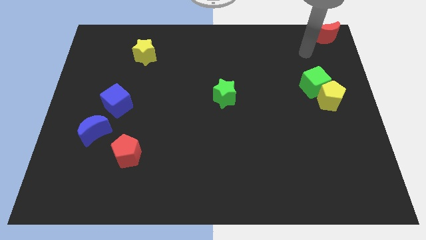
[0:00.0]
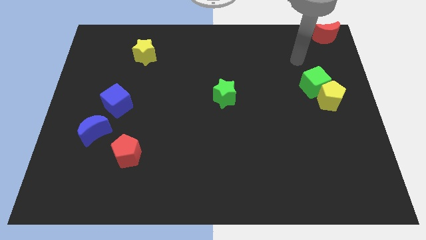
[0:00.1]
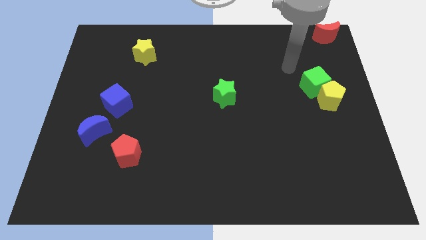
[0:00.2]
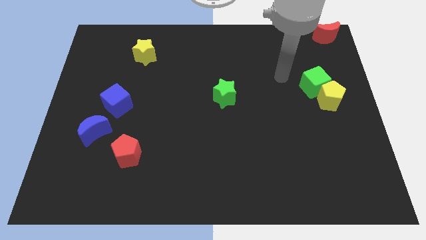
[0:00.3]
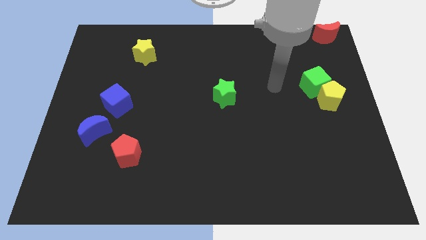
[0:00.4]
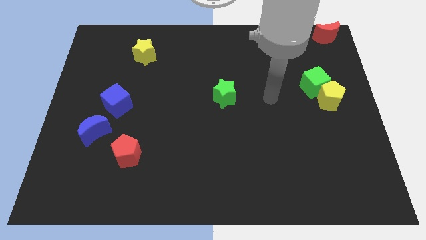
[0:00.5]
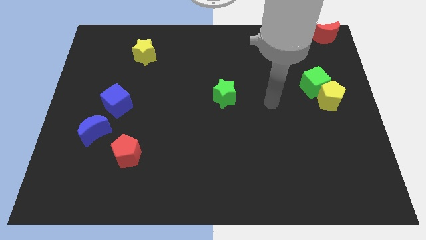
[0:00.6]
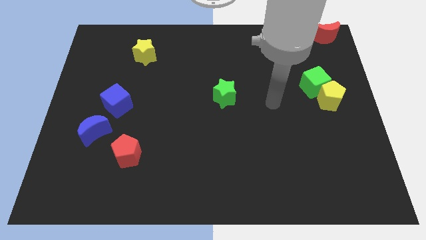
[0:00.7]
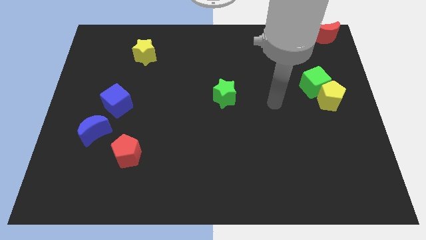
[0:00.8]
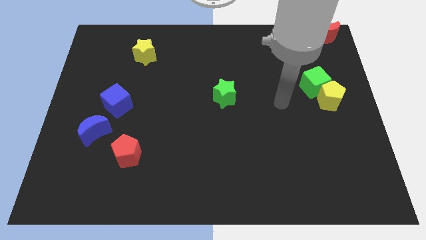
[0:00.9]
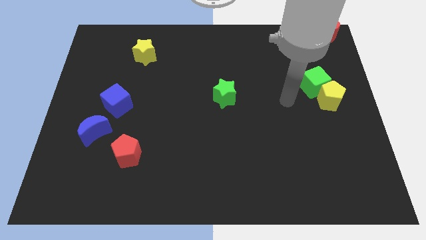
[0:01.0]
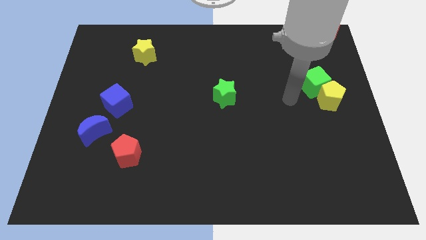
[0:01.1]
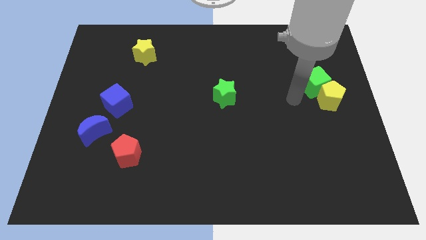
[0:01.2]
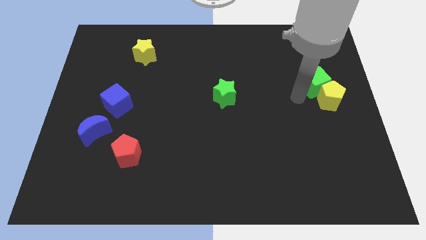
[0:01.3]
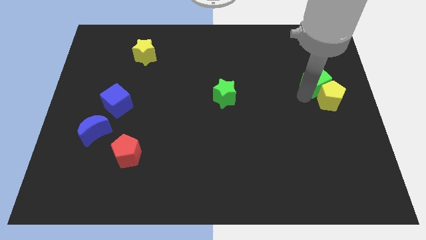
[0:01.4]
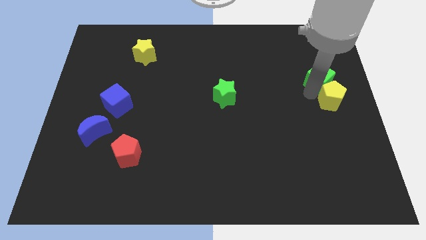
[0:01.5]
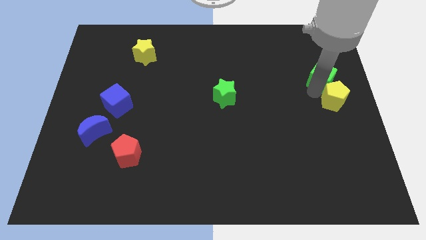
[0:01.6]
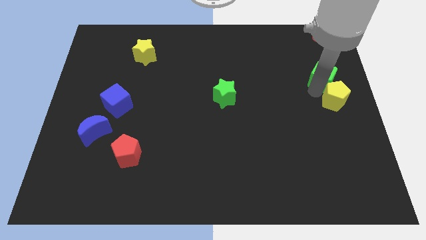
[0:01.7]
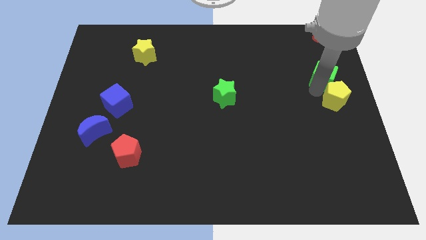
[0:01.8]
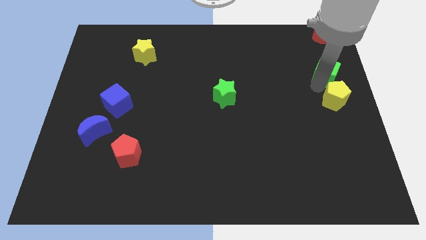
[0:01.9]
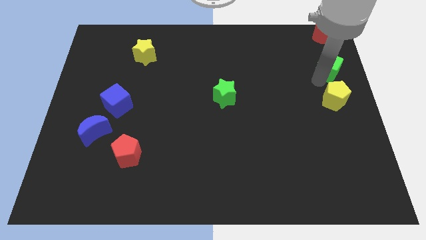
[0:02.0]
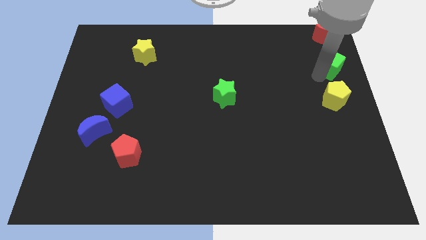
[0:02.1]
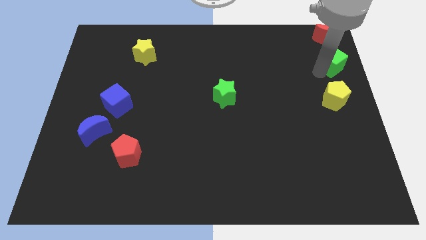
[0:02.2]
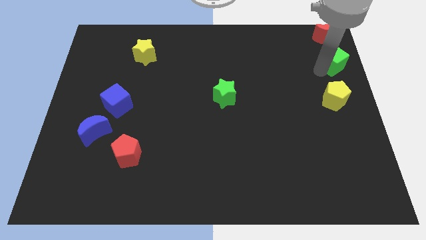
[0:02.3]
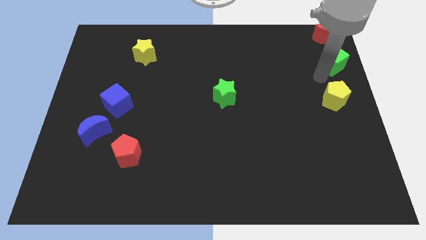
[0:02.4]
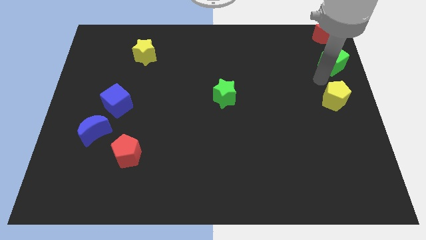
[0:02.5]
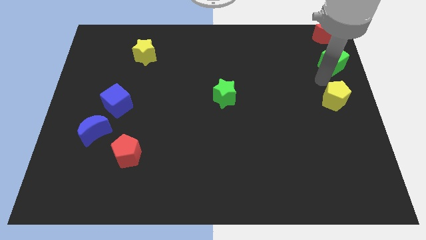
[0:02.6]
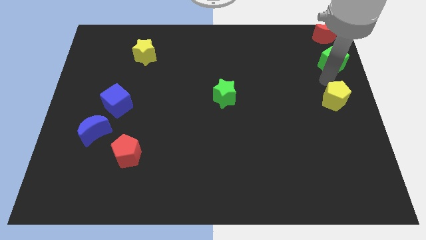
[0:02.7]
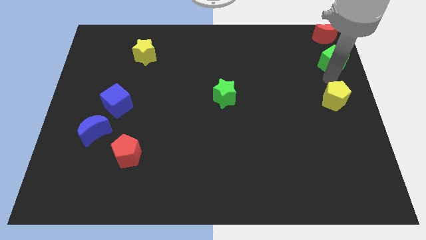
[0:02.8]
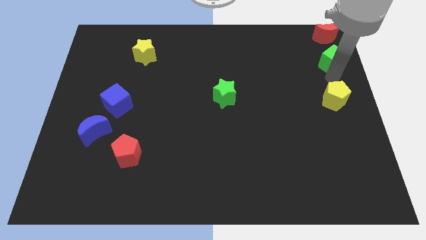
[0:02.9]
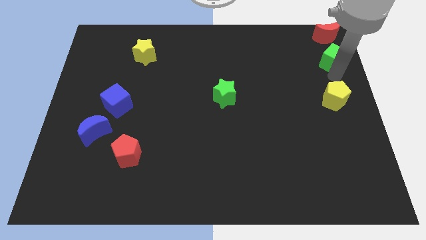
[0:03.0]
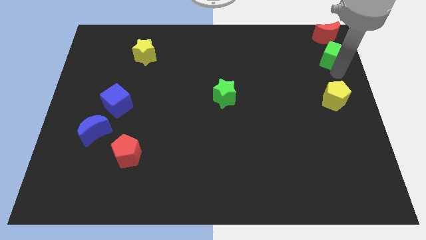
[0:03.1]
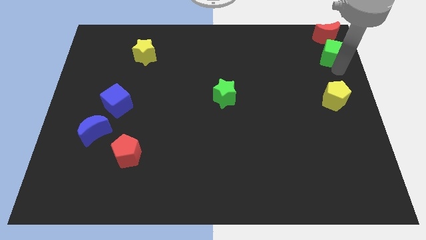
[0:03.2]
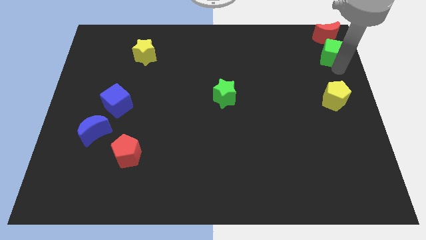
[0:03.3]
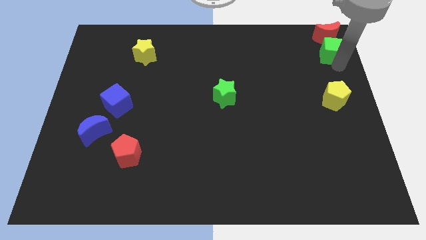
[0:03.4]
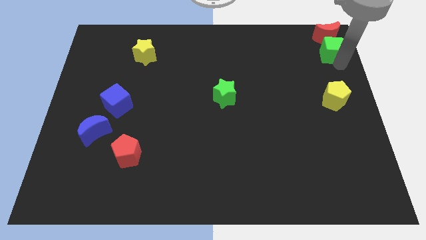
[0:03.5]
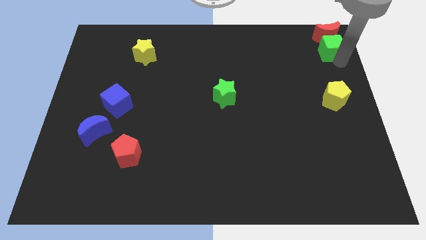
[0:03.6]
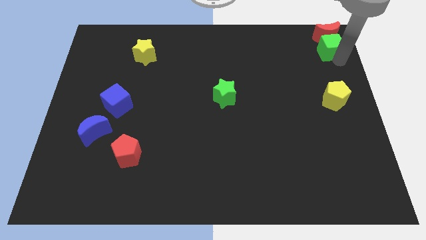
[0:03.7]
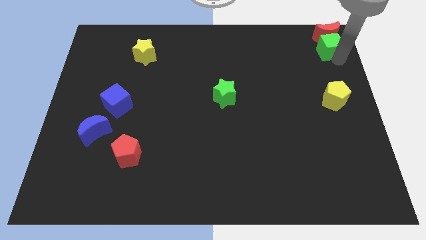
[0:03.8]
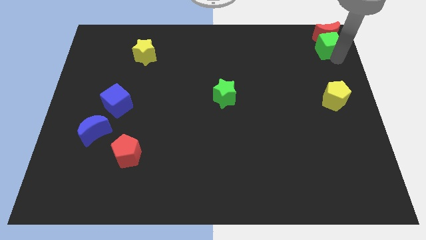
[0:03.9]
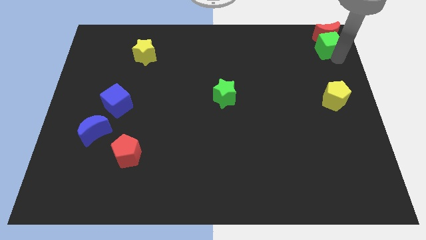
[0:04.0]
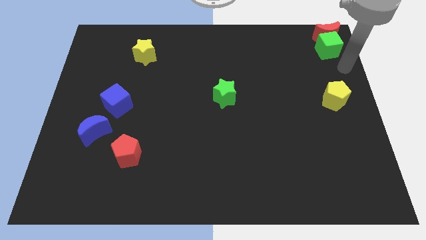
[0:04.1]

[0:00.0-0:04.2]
place the green cube below the red crescent

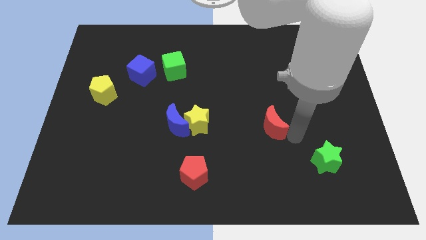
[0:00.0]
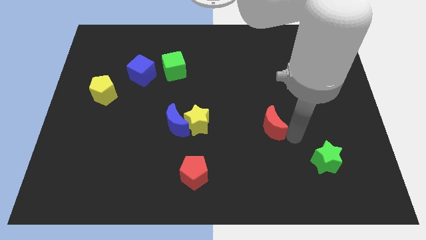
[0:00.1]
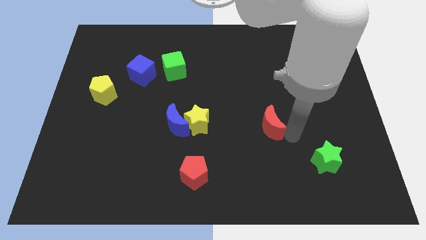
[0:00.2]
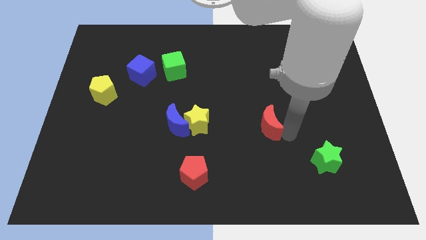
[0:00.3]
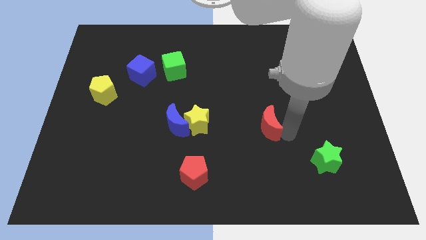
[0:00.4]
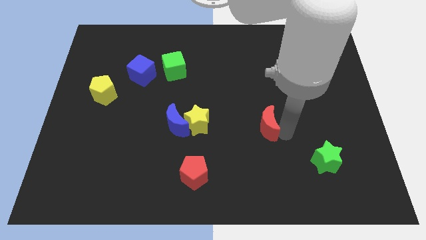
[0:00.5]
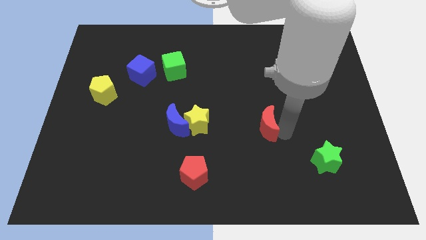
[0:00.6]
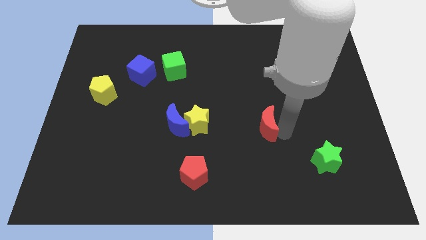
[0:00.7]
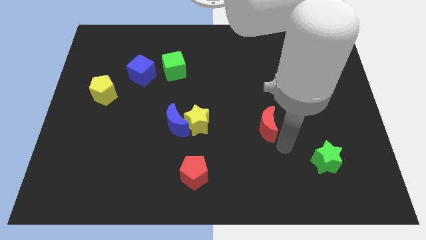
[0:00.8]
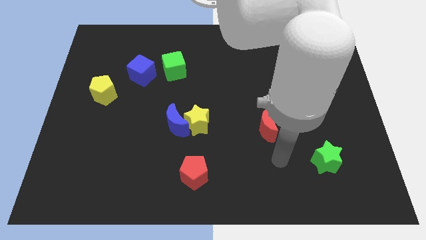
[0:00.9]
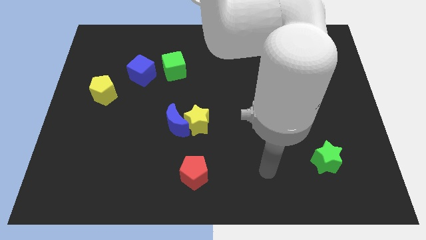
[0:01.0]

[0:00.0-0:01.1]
move the red moon to the center

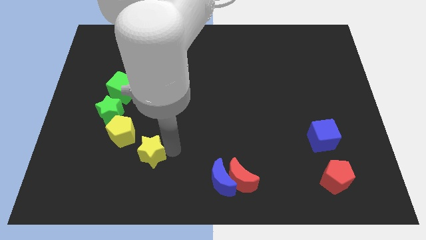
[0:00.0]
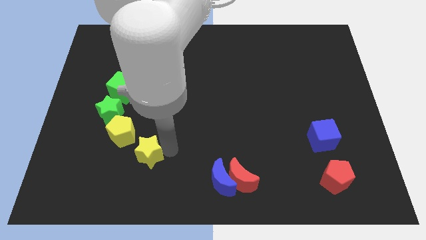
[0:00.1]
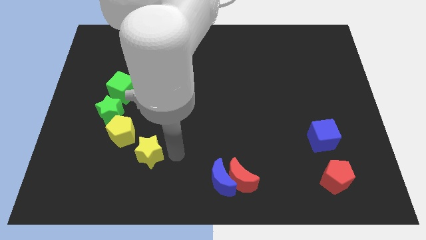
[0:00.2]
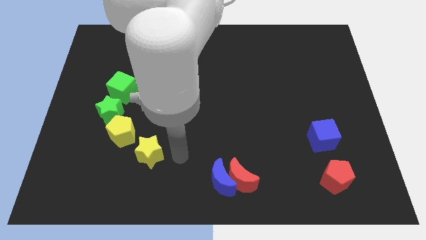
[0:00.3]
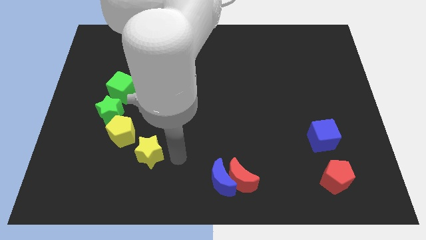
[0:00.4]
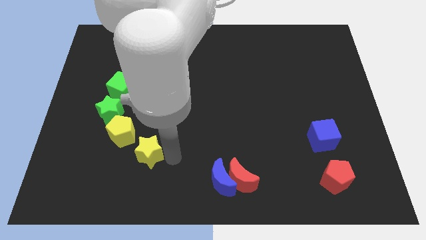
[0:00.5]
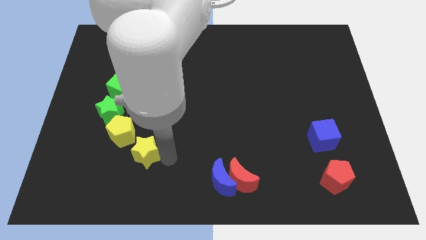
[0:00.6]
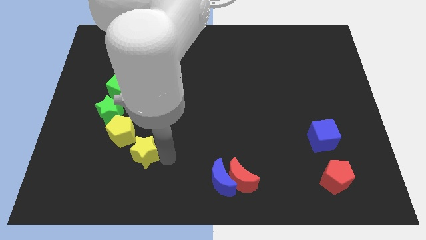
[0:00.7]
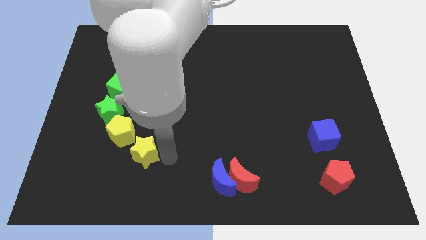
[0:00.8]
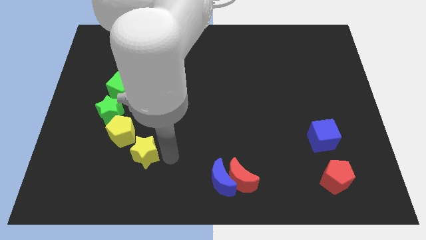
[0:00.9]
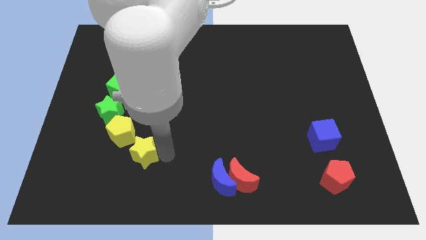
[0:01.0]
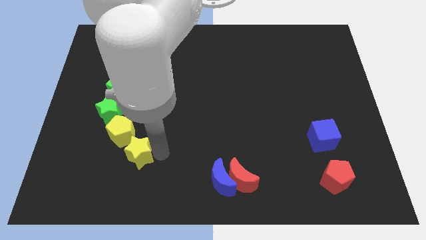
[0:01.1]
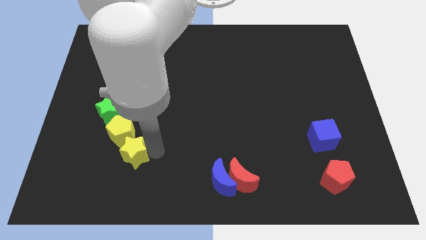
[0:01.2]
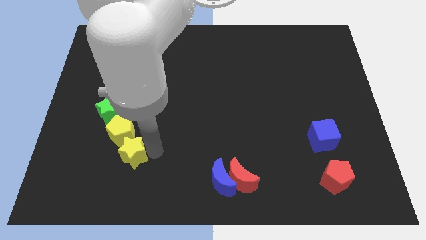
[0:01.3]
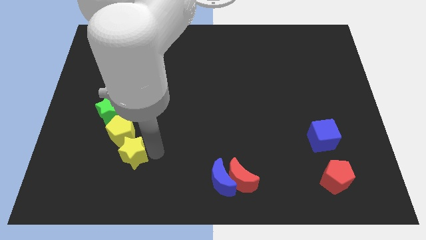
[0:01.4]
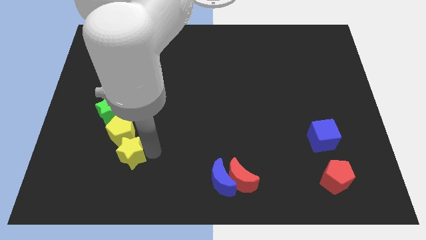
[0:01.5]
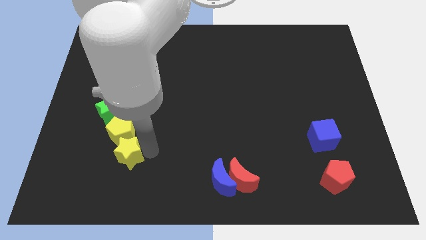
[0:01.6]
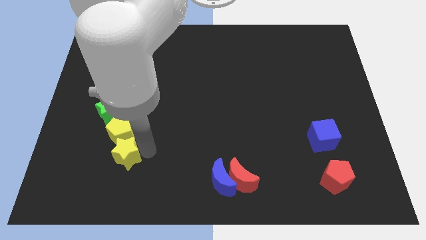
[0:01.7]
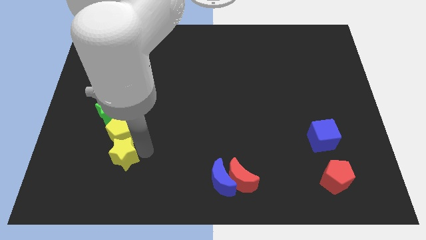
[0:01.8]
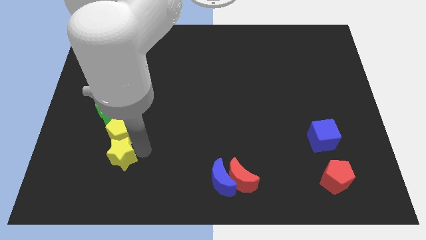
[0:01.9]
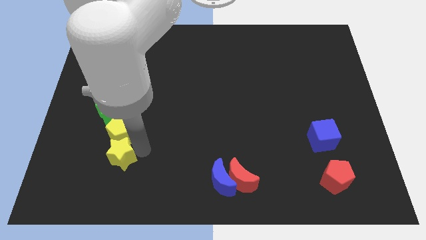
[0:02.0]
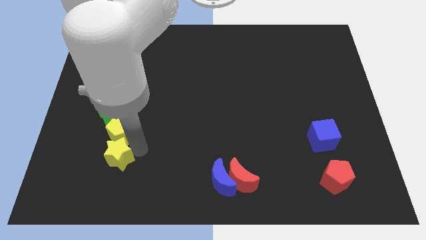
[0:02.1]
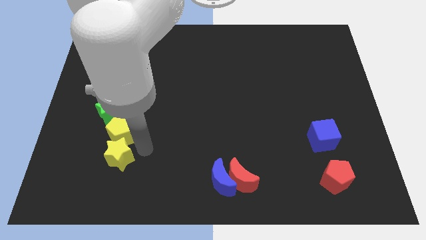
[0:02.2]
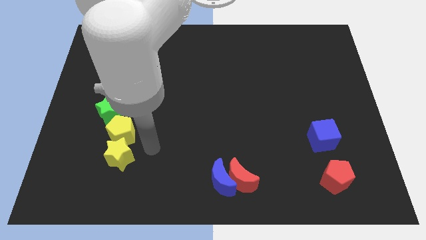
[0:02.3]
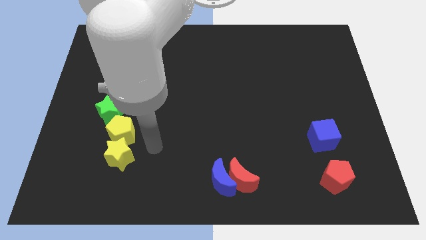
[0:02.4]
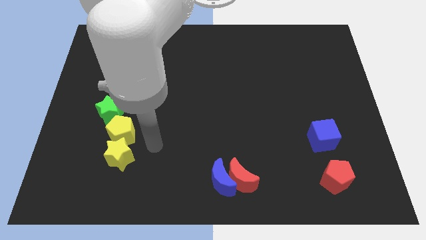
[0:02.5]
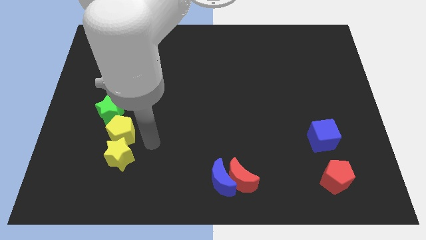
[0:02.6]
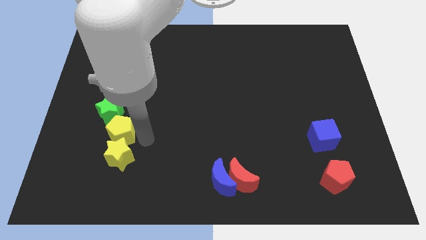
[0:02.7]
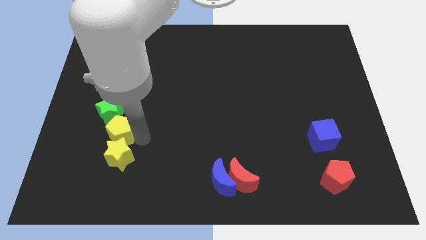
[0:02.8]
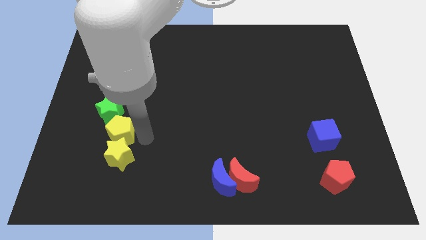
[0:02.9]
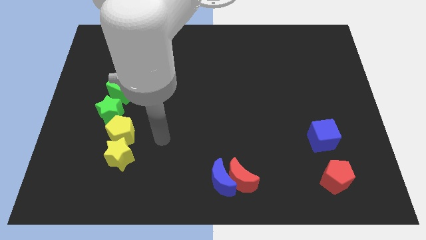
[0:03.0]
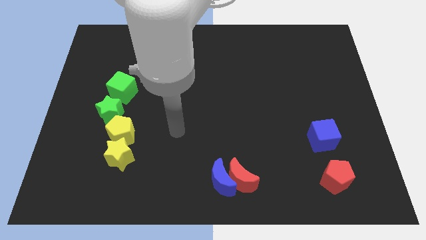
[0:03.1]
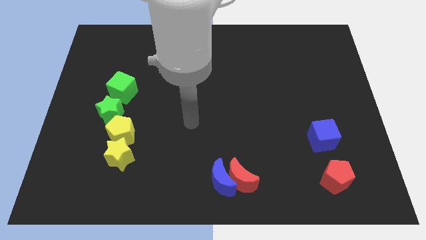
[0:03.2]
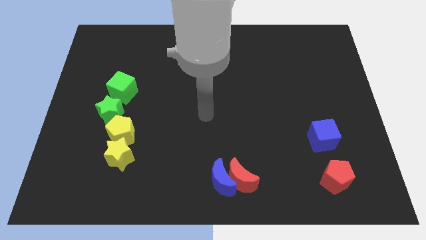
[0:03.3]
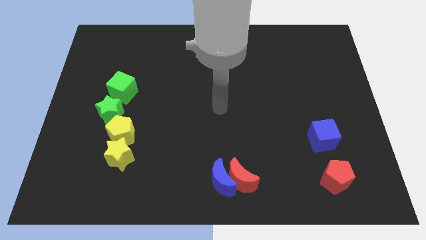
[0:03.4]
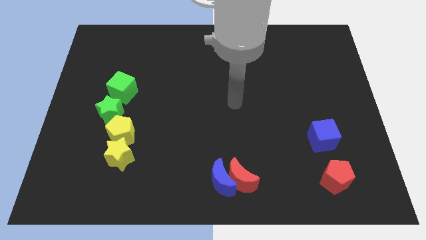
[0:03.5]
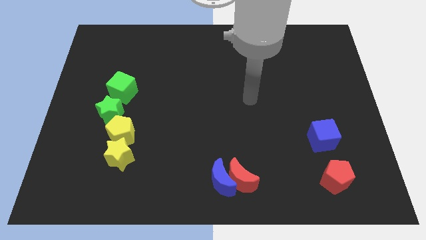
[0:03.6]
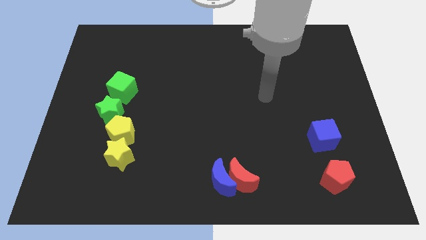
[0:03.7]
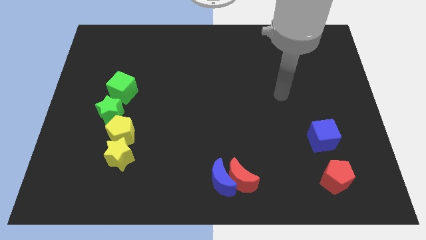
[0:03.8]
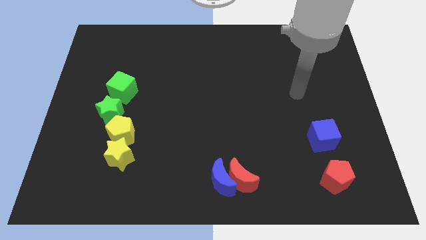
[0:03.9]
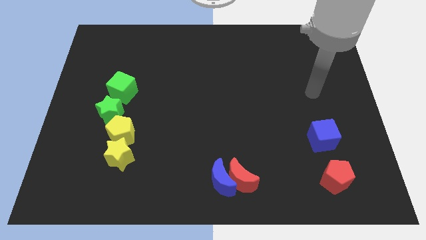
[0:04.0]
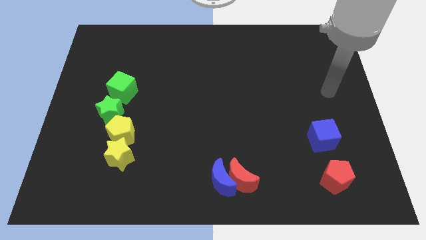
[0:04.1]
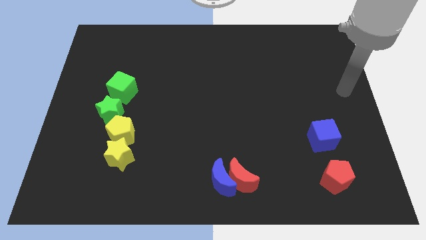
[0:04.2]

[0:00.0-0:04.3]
place the yellow star below the yellow pentagon
